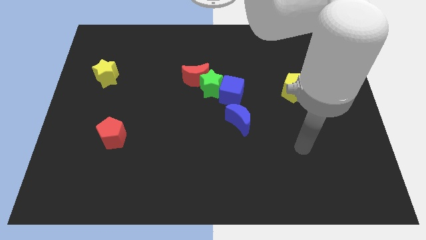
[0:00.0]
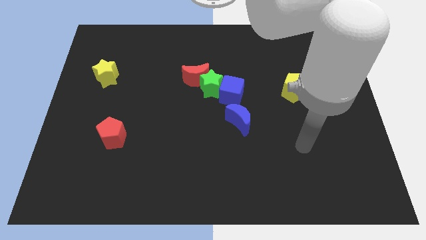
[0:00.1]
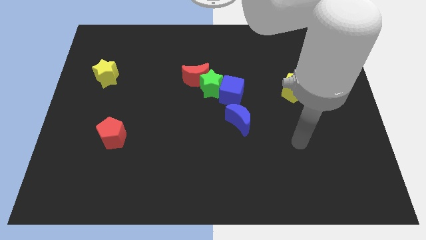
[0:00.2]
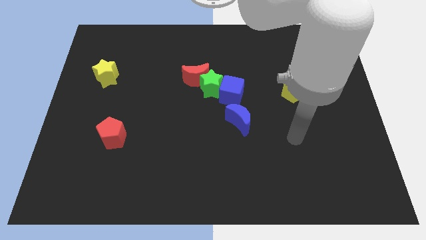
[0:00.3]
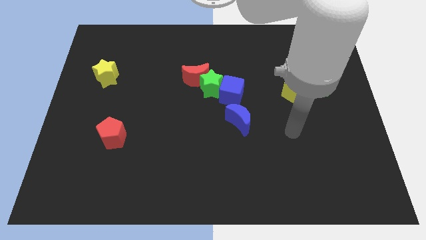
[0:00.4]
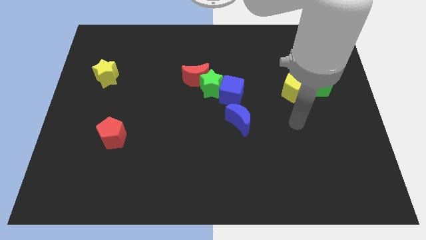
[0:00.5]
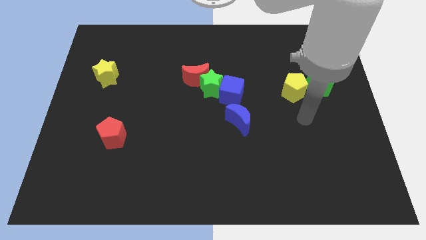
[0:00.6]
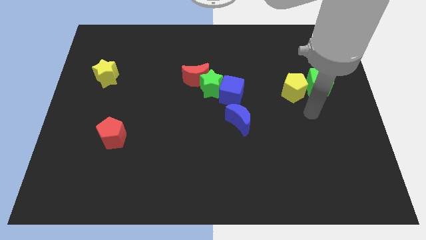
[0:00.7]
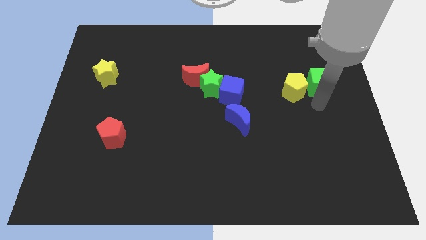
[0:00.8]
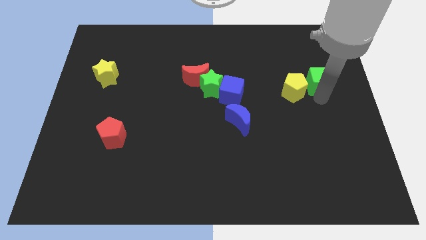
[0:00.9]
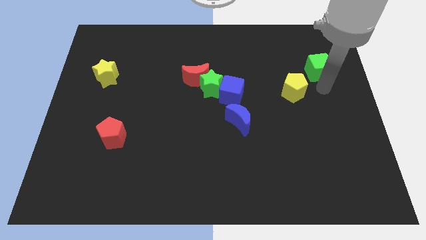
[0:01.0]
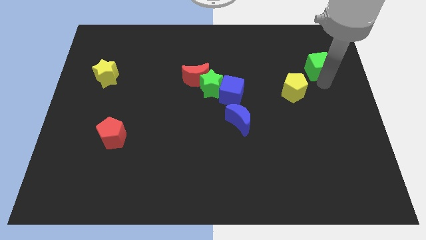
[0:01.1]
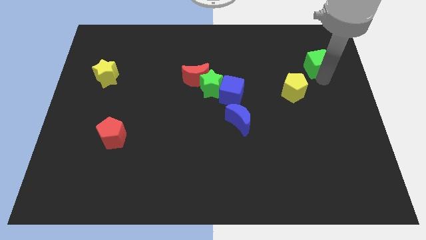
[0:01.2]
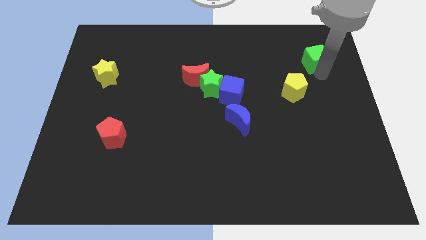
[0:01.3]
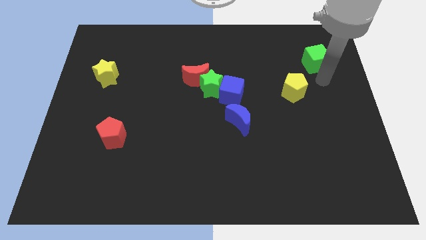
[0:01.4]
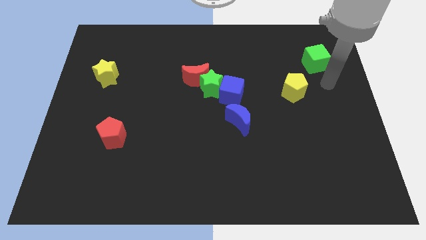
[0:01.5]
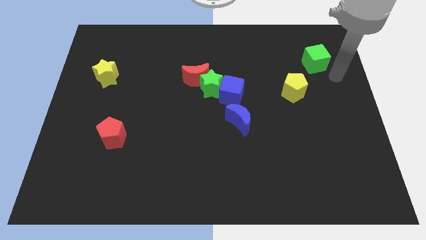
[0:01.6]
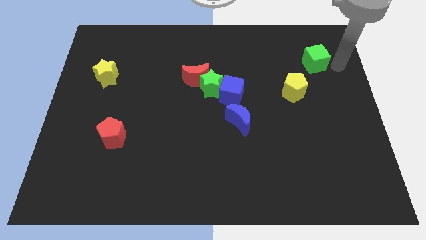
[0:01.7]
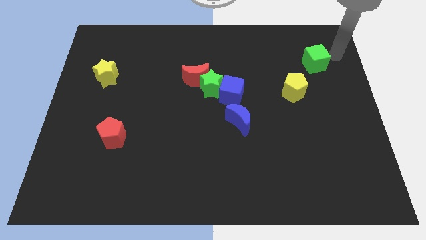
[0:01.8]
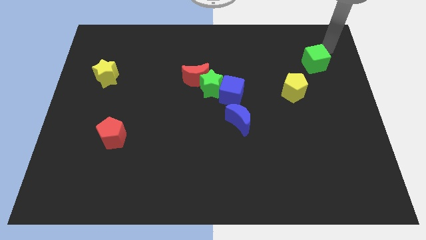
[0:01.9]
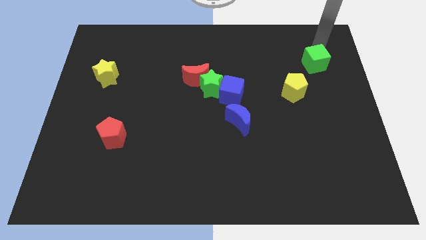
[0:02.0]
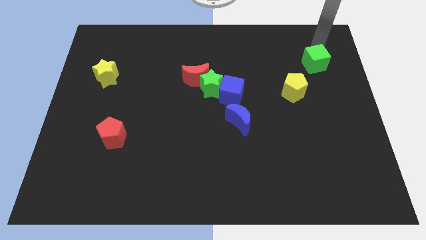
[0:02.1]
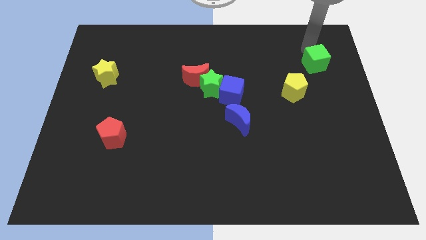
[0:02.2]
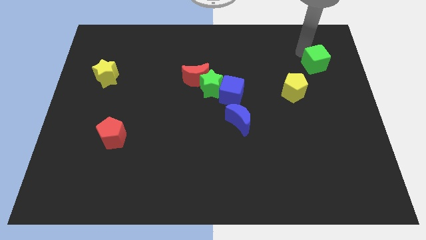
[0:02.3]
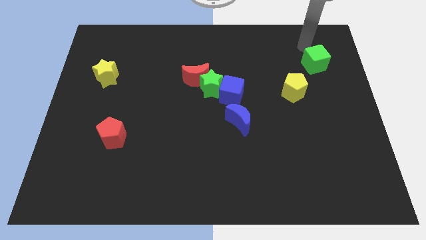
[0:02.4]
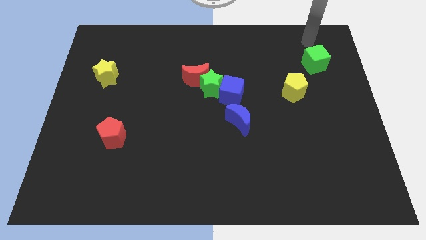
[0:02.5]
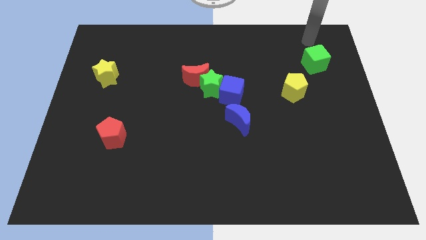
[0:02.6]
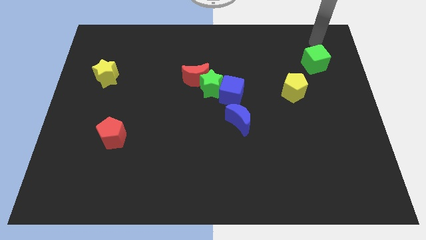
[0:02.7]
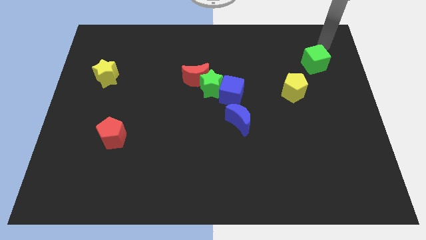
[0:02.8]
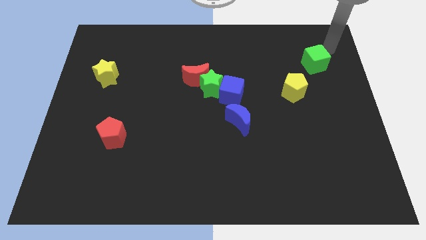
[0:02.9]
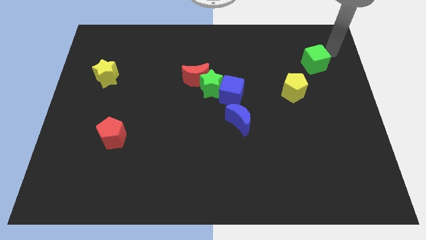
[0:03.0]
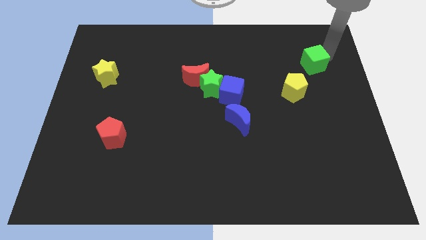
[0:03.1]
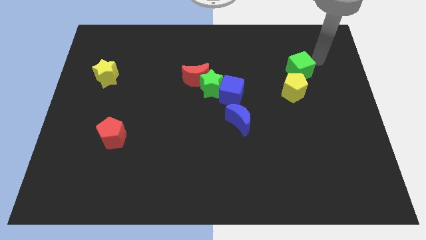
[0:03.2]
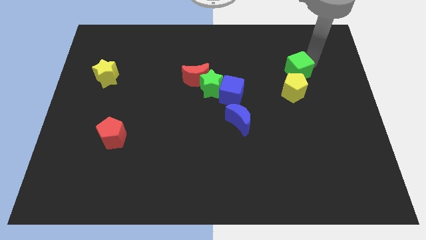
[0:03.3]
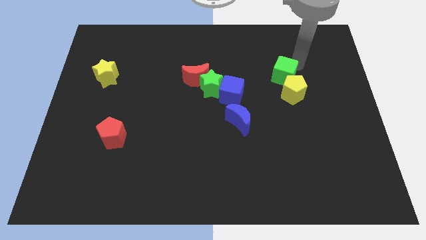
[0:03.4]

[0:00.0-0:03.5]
push the green cube into the top side of the yellow pentagon

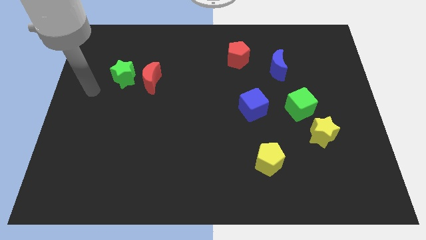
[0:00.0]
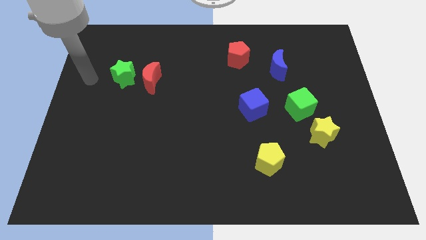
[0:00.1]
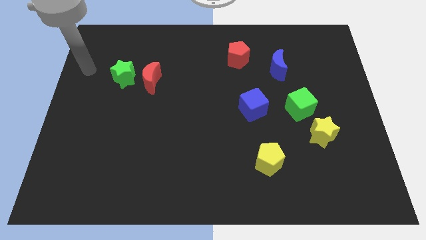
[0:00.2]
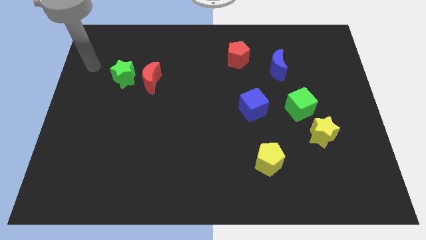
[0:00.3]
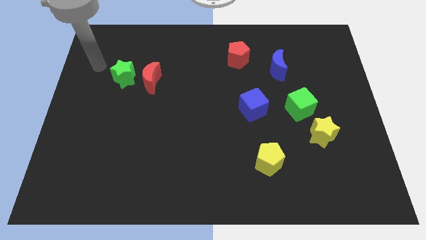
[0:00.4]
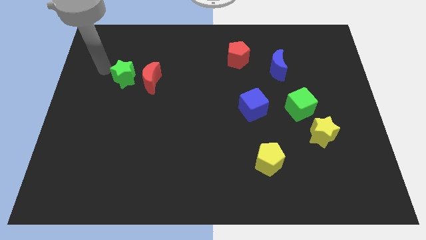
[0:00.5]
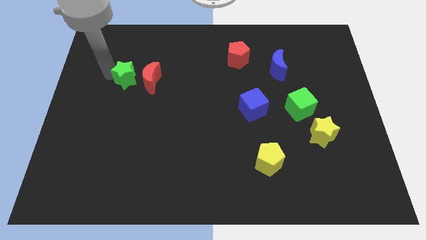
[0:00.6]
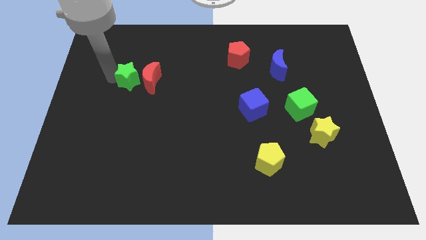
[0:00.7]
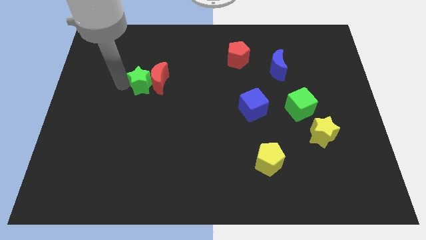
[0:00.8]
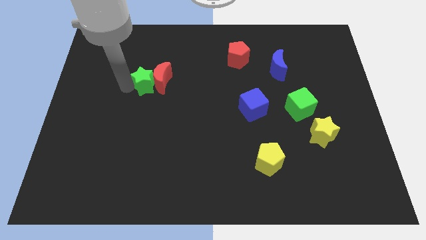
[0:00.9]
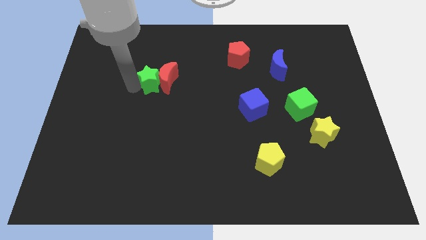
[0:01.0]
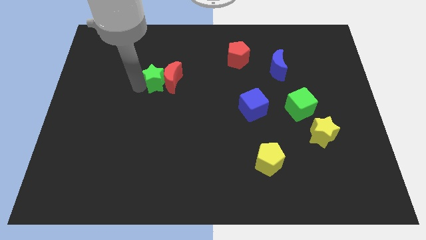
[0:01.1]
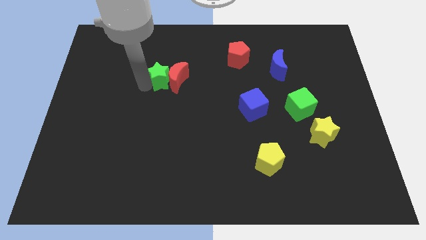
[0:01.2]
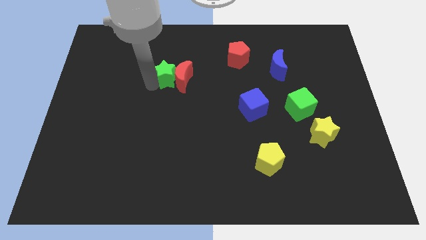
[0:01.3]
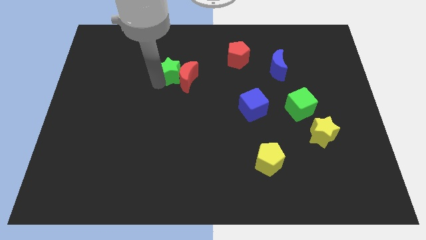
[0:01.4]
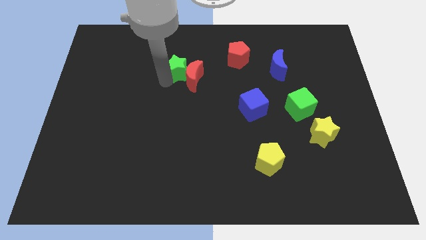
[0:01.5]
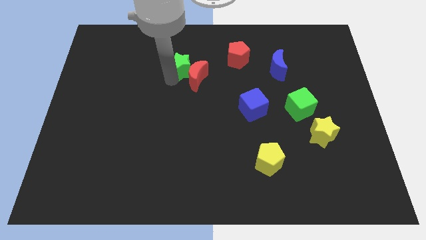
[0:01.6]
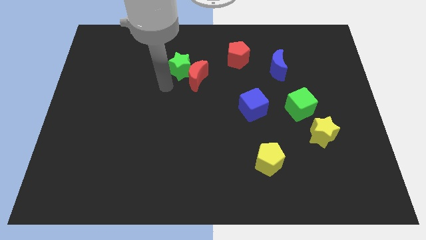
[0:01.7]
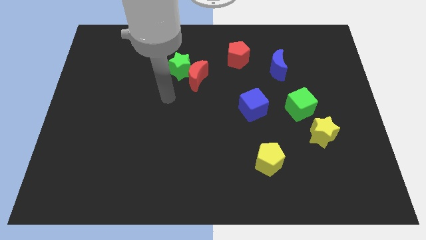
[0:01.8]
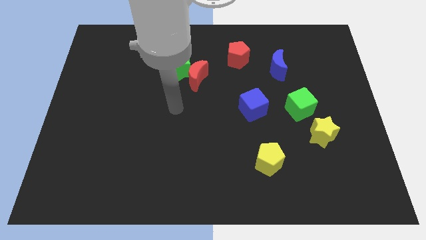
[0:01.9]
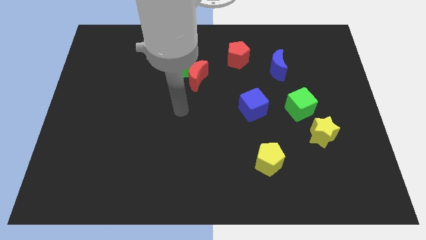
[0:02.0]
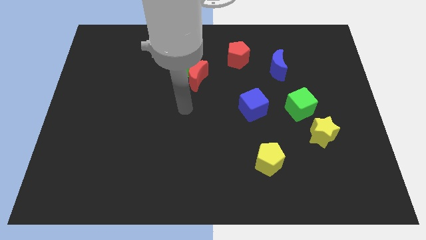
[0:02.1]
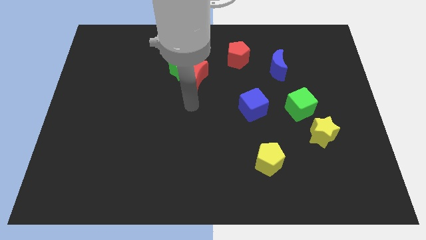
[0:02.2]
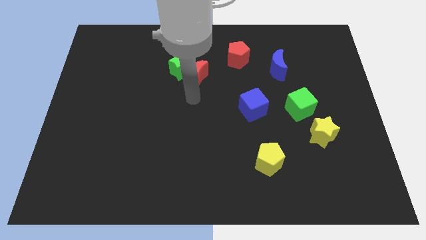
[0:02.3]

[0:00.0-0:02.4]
place the green star to the center

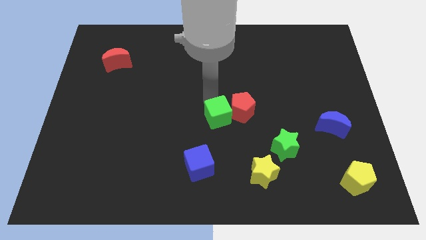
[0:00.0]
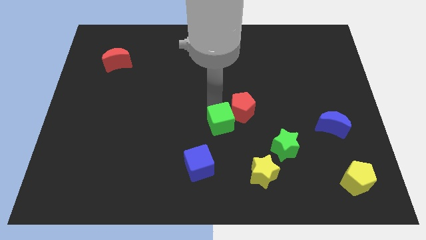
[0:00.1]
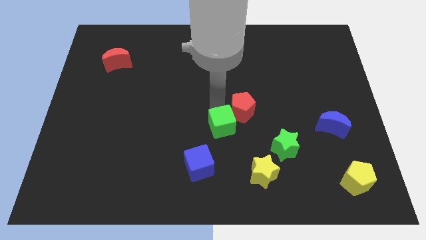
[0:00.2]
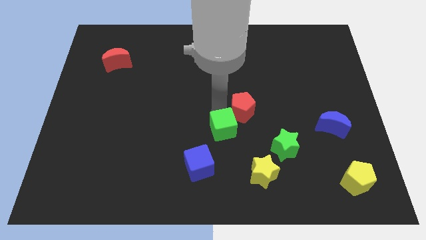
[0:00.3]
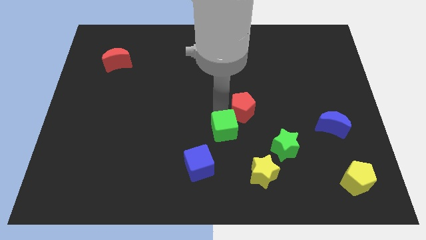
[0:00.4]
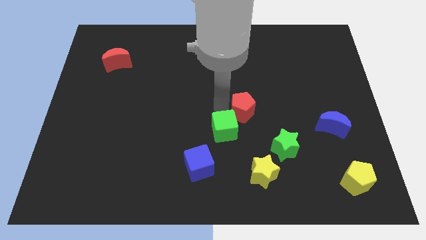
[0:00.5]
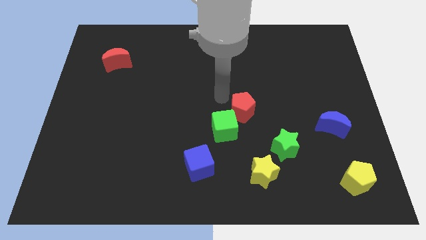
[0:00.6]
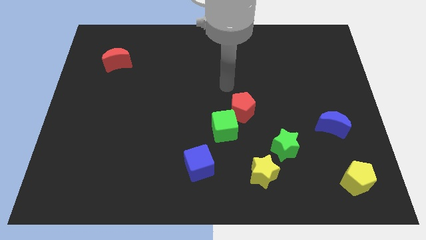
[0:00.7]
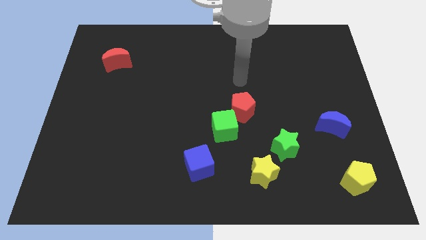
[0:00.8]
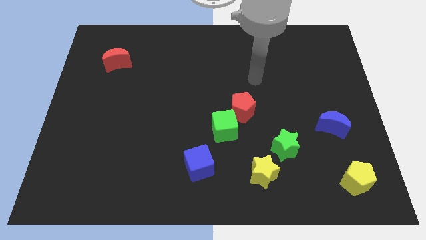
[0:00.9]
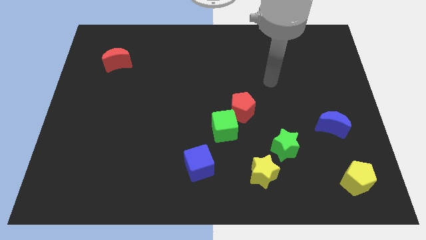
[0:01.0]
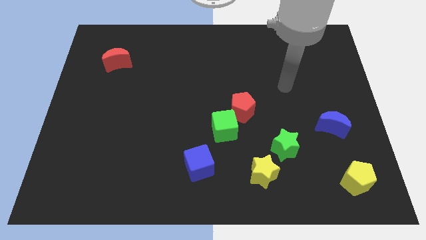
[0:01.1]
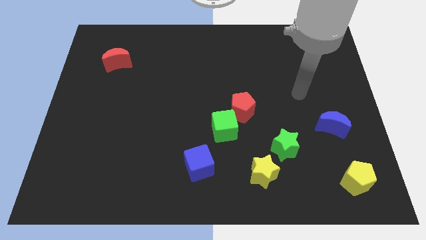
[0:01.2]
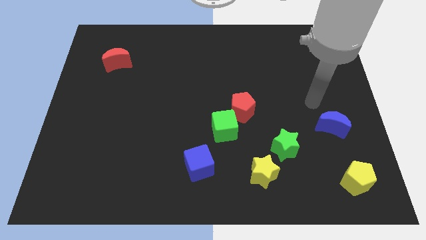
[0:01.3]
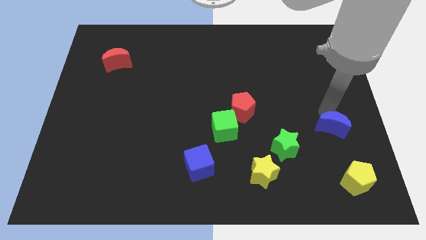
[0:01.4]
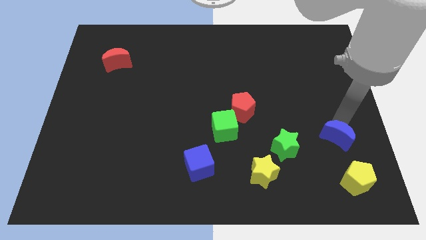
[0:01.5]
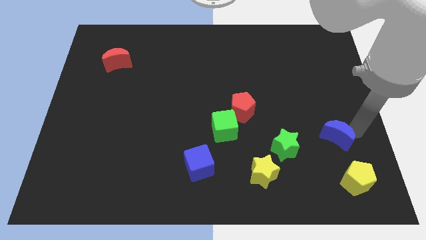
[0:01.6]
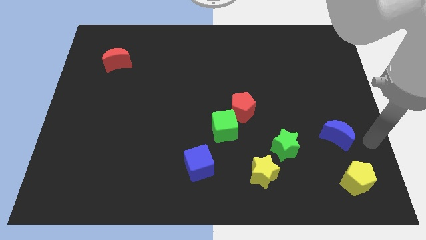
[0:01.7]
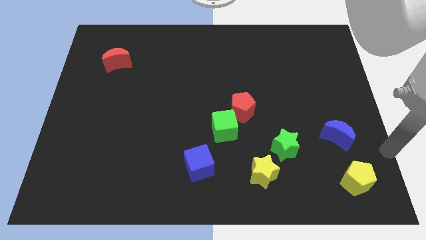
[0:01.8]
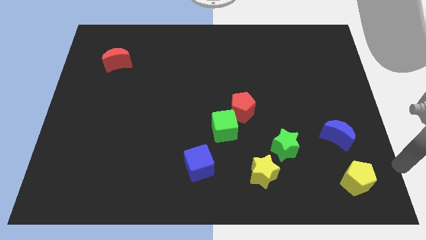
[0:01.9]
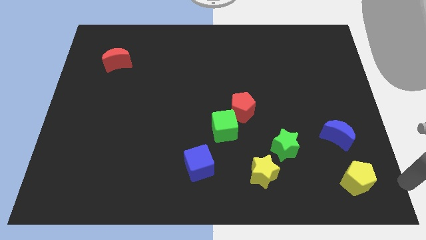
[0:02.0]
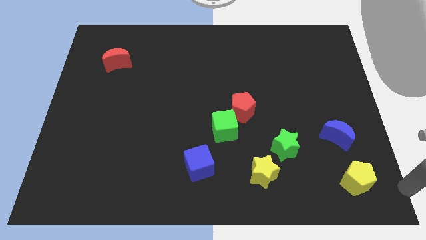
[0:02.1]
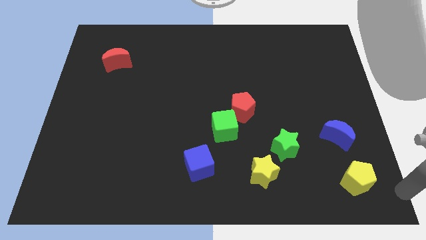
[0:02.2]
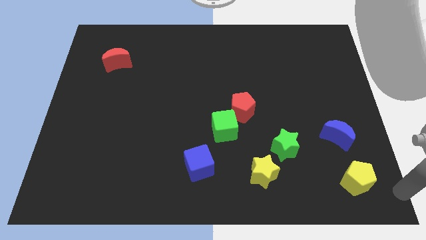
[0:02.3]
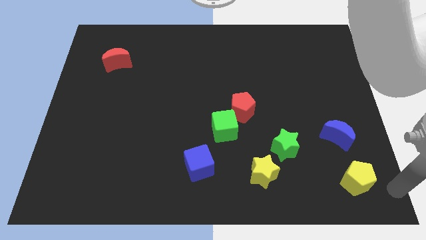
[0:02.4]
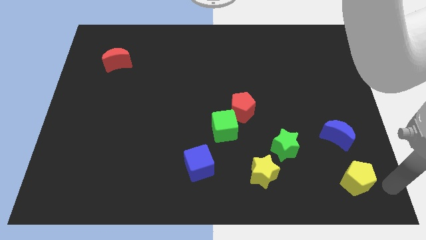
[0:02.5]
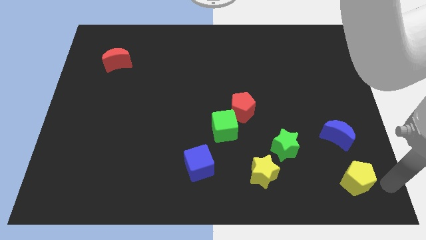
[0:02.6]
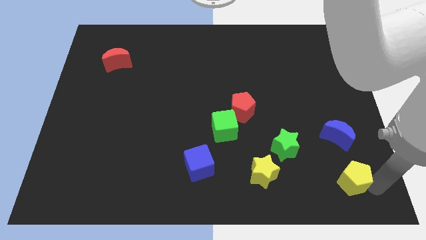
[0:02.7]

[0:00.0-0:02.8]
touch the blue moon

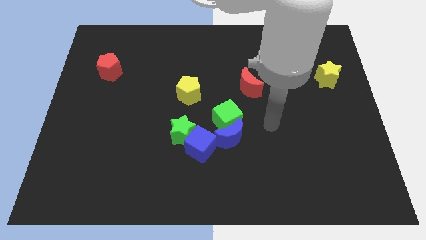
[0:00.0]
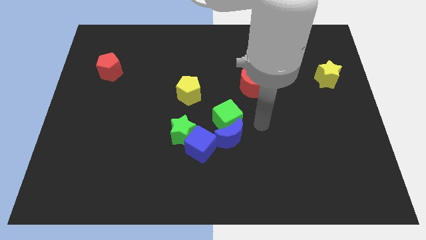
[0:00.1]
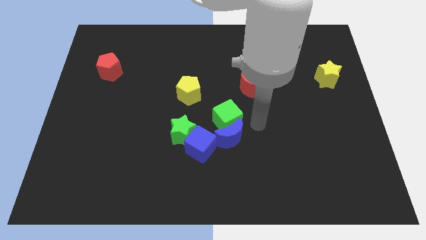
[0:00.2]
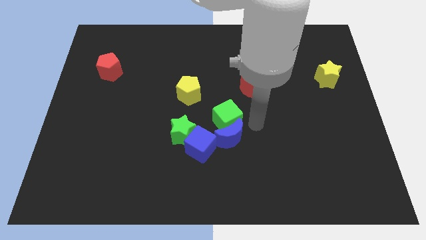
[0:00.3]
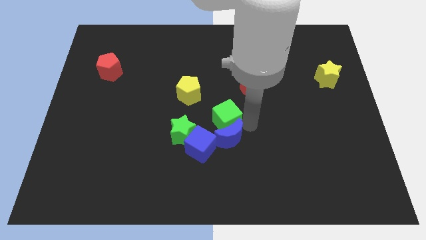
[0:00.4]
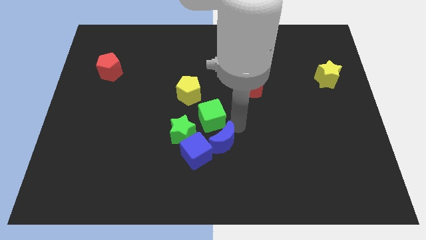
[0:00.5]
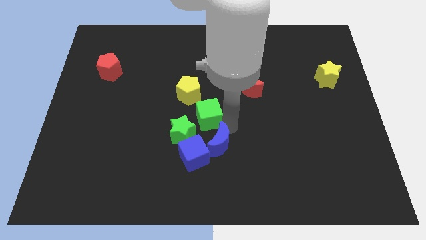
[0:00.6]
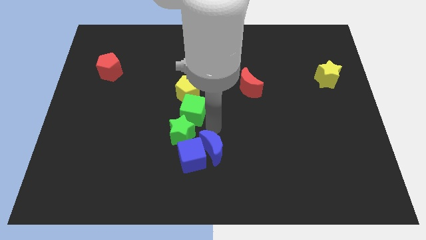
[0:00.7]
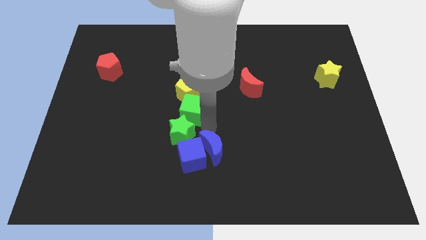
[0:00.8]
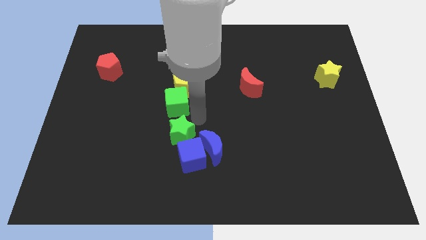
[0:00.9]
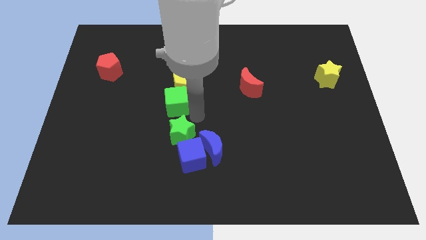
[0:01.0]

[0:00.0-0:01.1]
separate the green cube and blue moon
